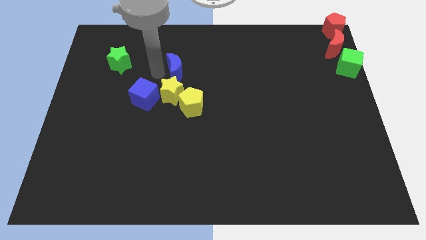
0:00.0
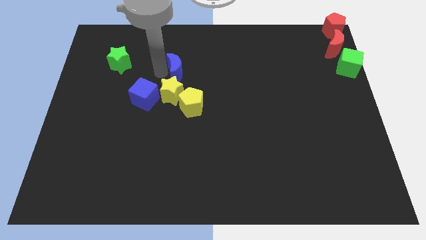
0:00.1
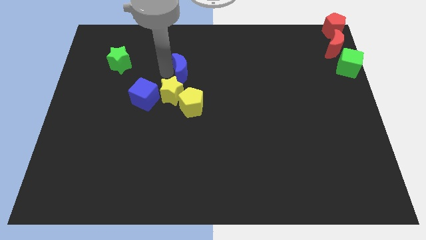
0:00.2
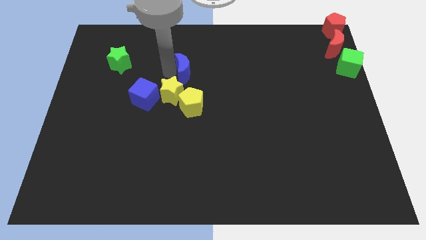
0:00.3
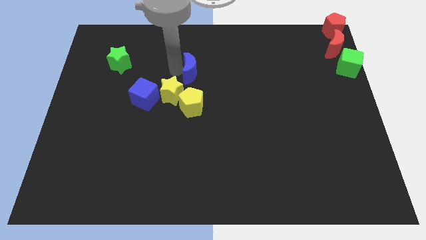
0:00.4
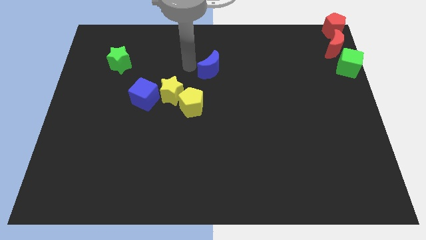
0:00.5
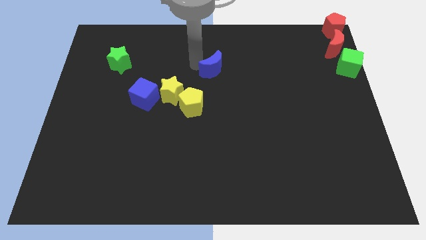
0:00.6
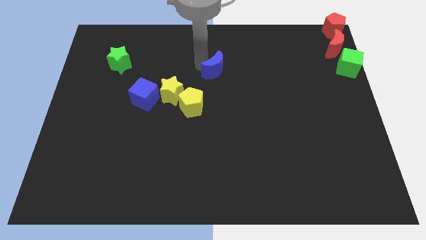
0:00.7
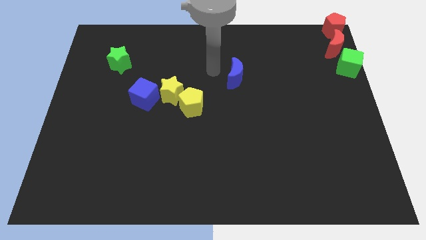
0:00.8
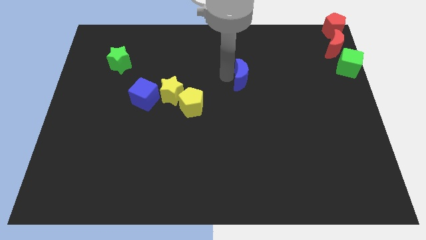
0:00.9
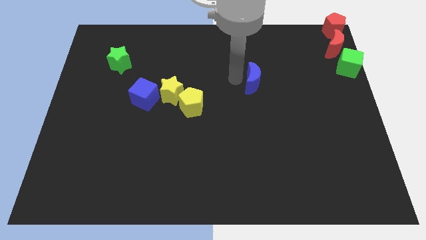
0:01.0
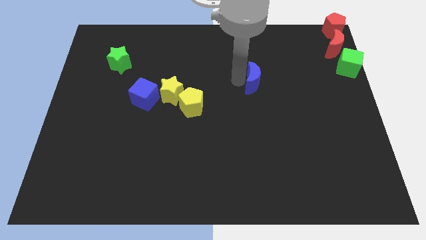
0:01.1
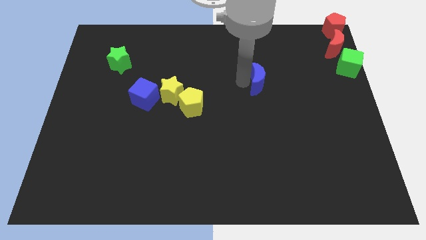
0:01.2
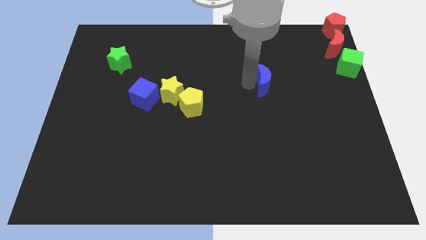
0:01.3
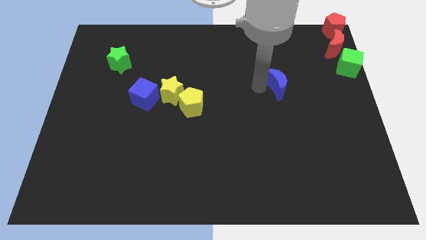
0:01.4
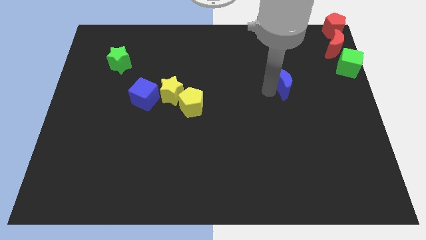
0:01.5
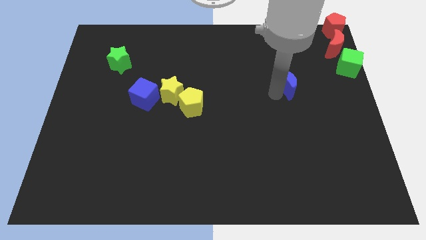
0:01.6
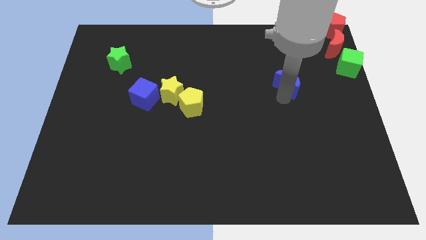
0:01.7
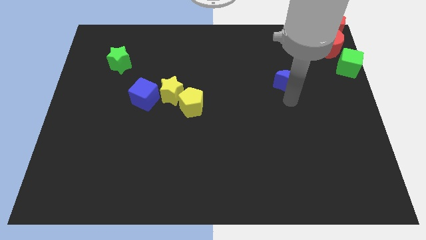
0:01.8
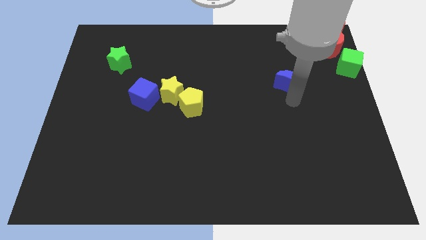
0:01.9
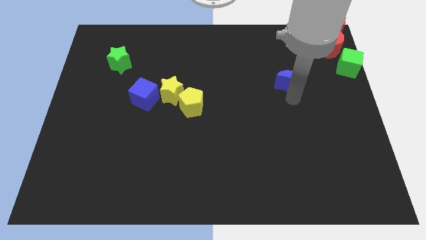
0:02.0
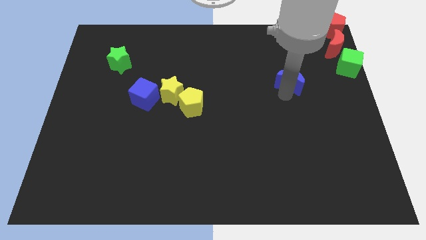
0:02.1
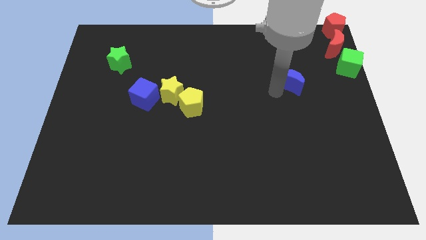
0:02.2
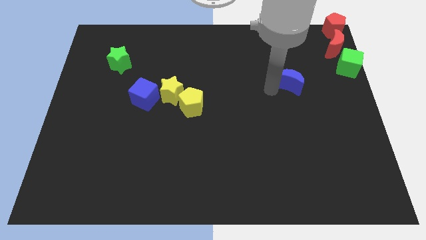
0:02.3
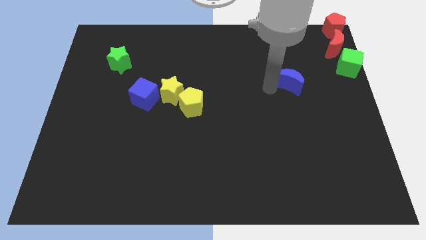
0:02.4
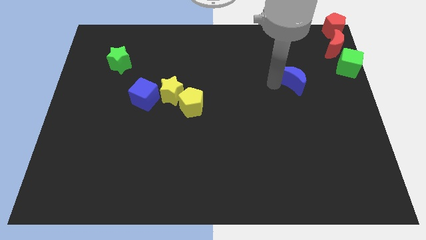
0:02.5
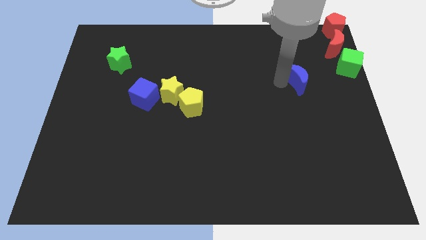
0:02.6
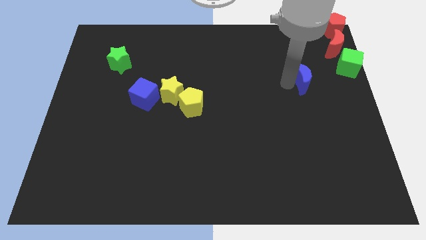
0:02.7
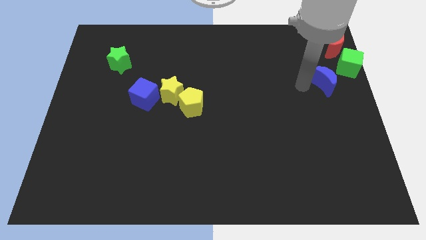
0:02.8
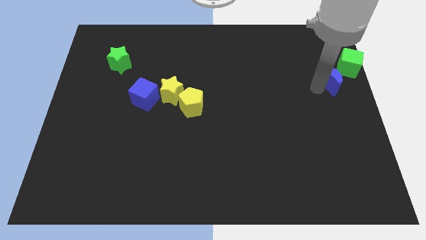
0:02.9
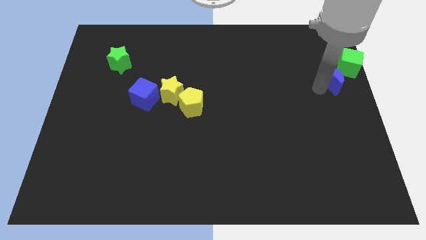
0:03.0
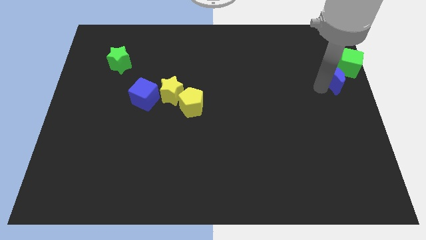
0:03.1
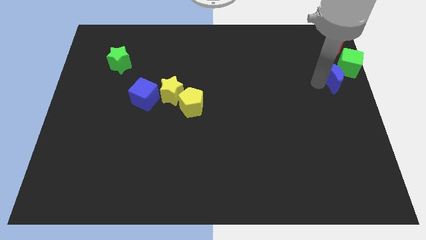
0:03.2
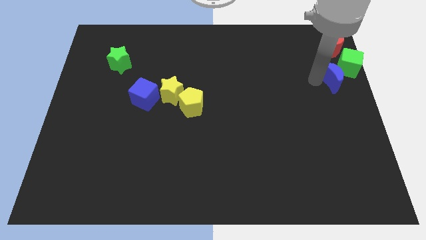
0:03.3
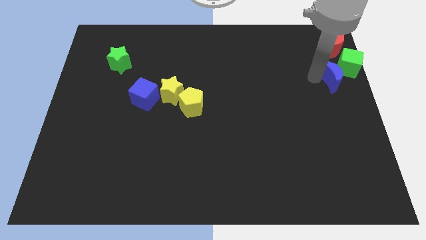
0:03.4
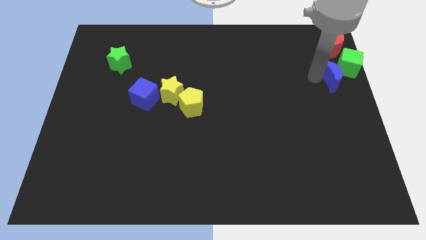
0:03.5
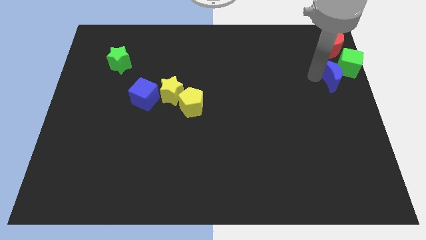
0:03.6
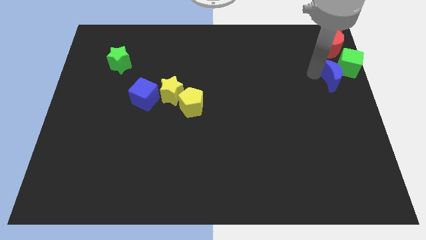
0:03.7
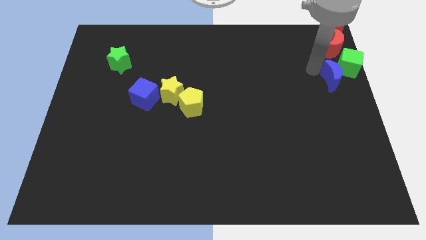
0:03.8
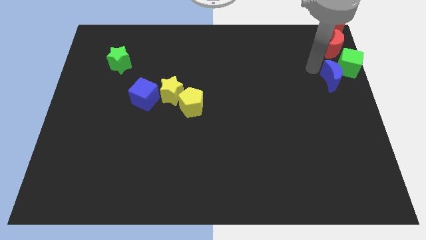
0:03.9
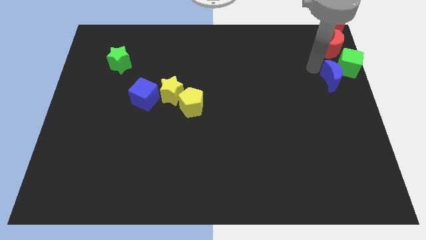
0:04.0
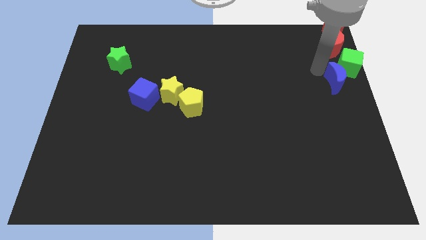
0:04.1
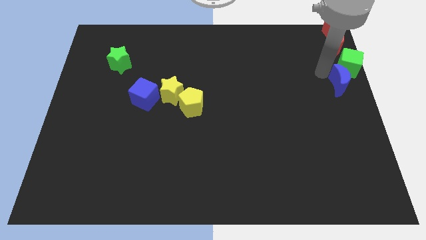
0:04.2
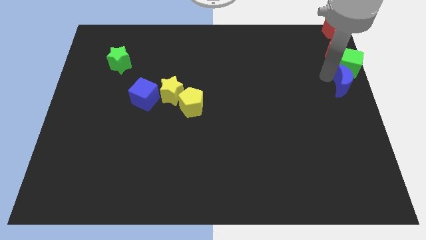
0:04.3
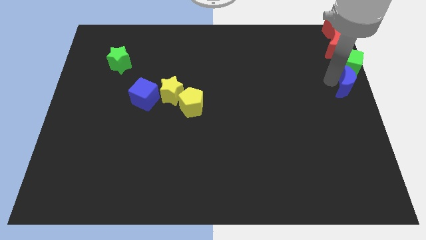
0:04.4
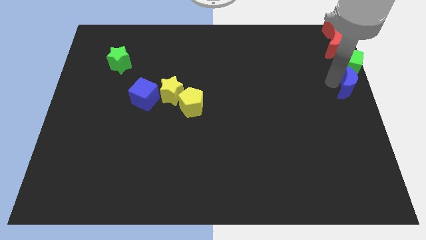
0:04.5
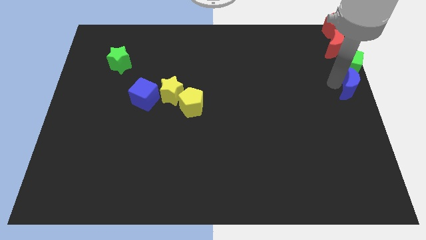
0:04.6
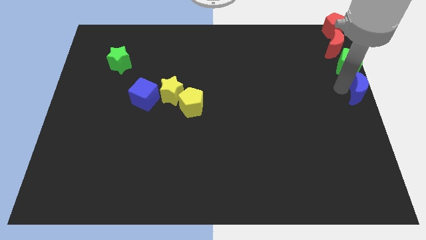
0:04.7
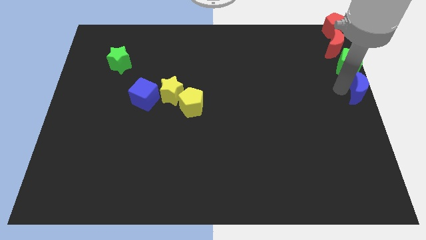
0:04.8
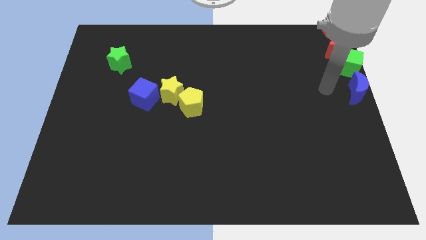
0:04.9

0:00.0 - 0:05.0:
move the blue crescent to the center right of the board

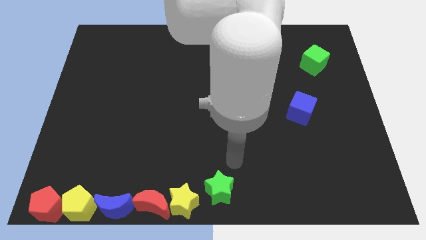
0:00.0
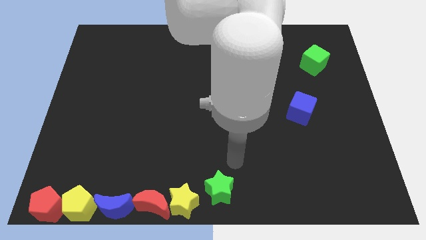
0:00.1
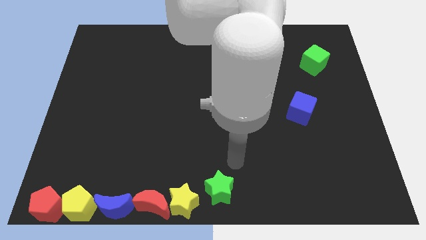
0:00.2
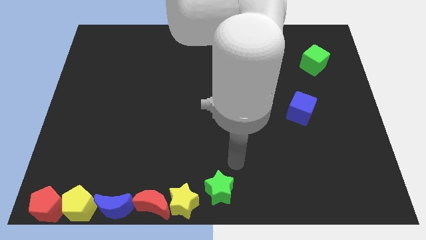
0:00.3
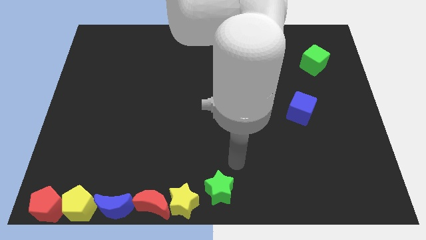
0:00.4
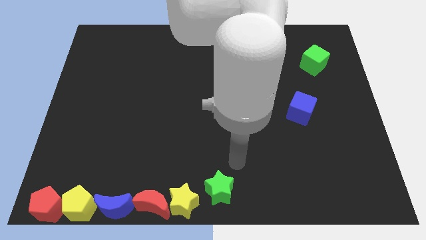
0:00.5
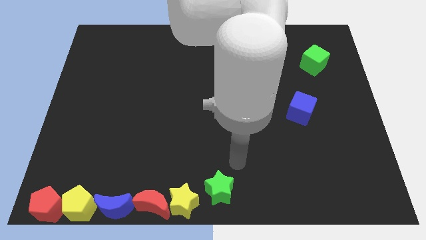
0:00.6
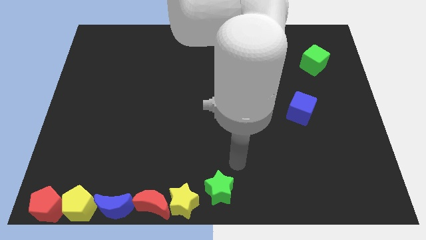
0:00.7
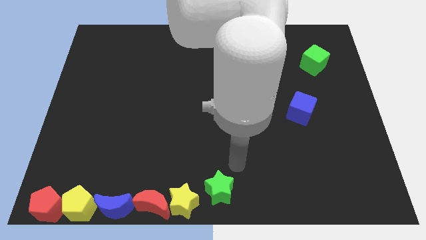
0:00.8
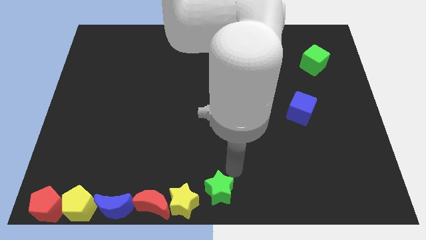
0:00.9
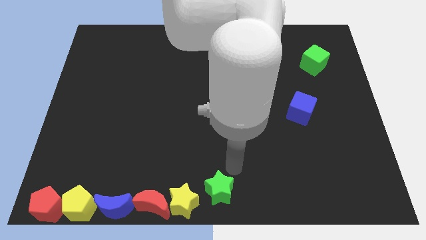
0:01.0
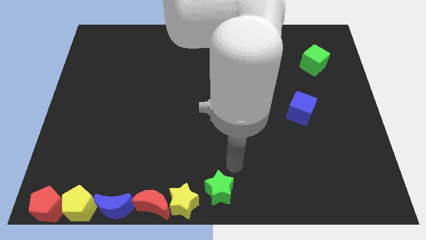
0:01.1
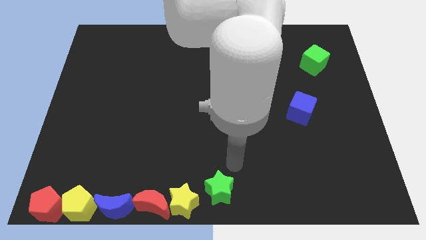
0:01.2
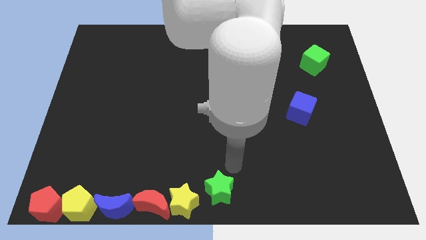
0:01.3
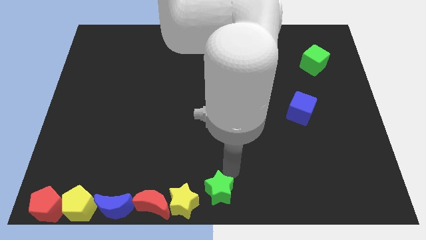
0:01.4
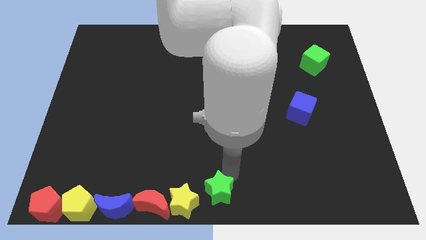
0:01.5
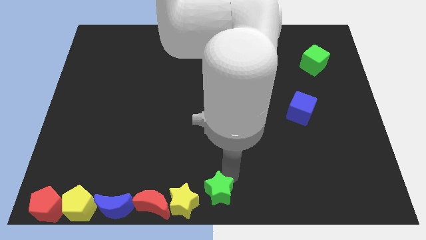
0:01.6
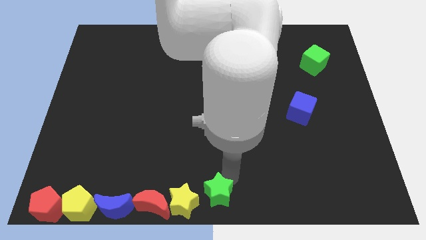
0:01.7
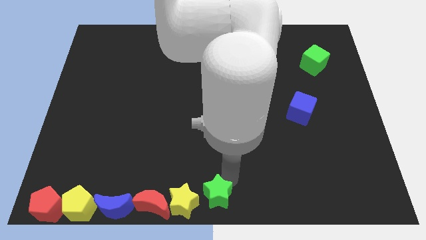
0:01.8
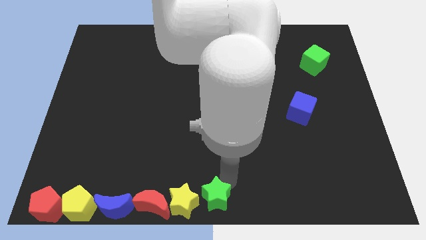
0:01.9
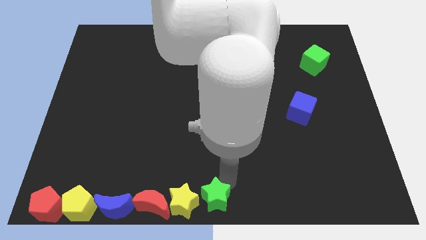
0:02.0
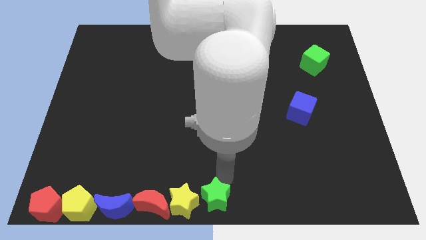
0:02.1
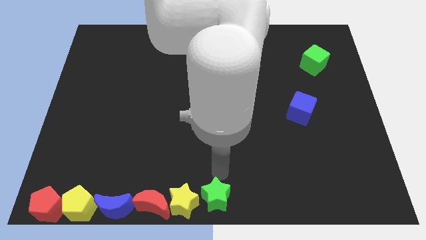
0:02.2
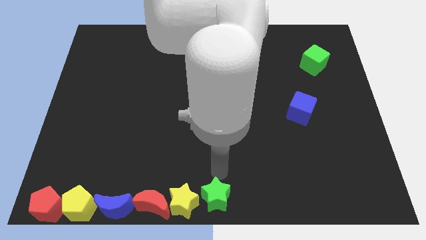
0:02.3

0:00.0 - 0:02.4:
move the green star right beside the yellow star

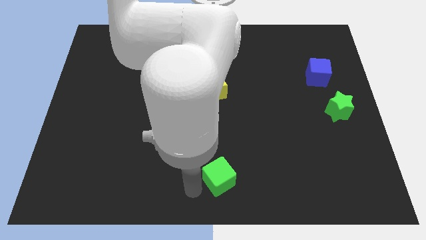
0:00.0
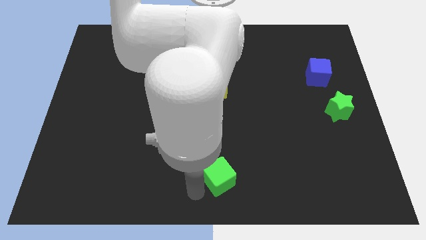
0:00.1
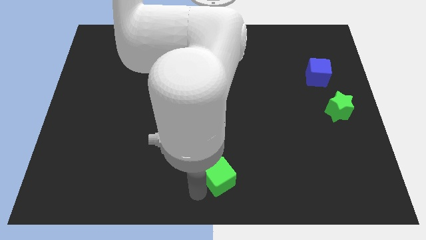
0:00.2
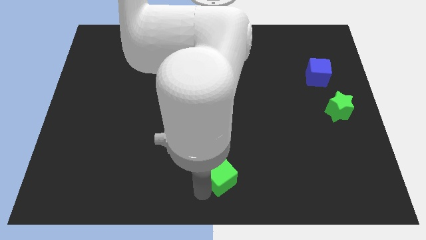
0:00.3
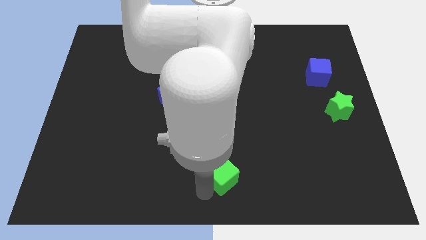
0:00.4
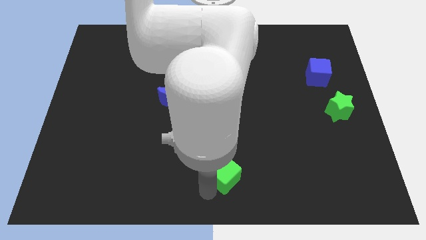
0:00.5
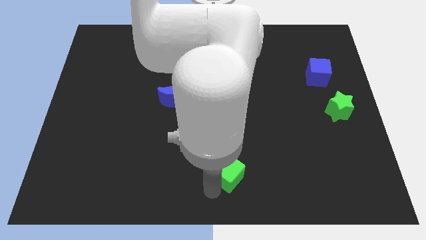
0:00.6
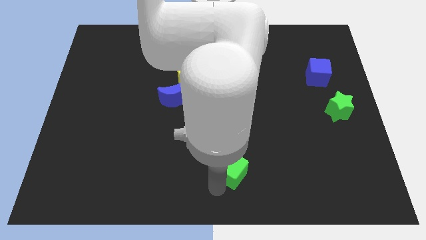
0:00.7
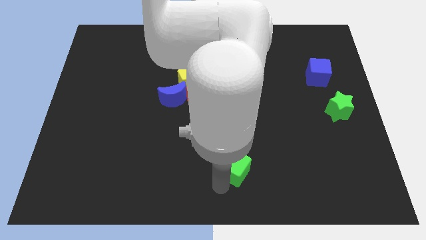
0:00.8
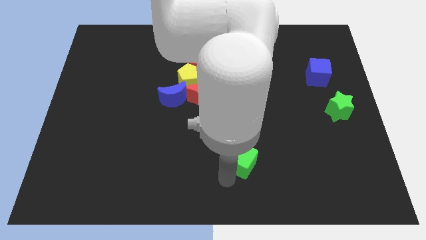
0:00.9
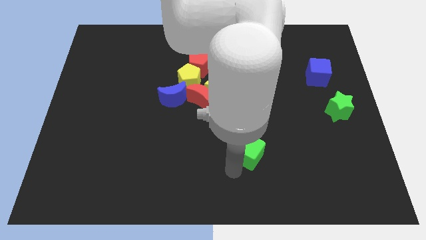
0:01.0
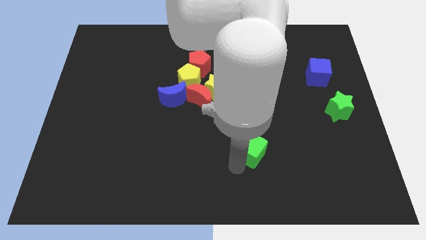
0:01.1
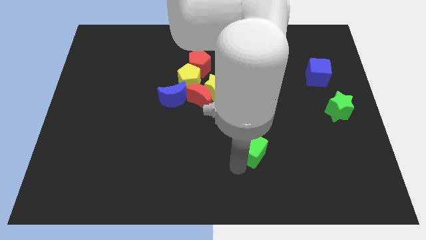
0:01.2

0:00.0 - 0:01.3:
slightly move the green cube towards up

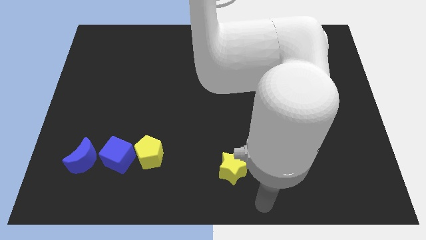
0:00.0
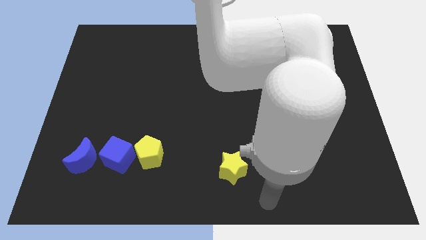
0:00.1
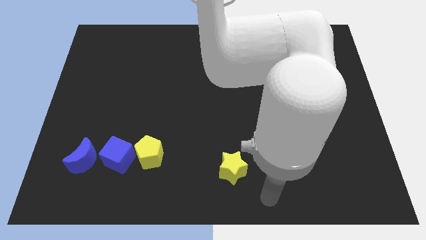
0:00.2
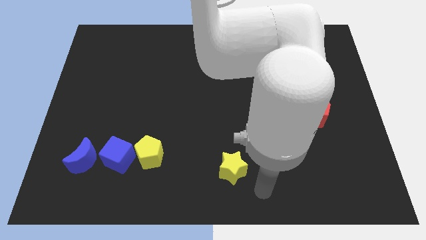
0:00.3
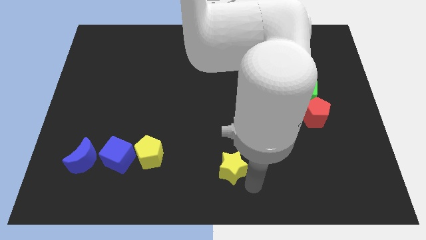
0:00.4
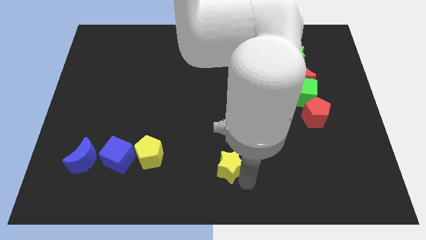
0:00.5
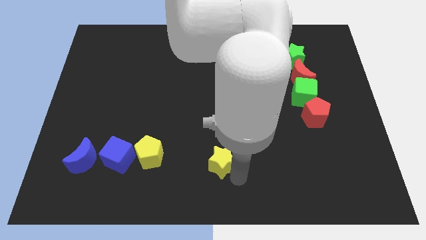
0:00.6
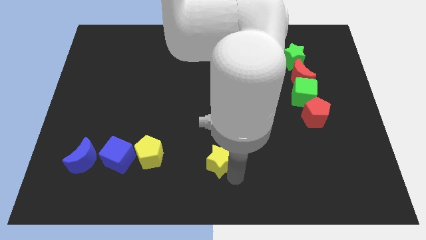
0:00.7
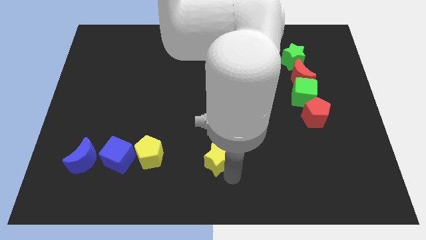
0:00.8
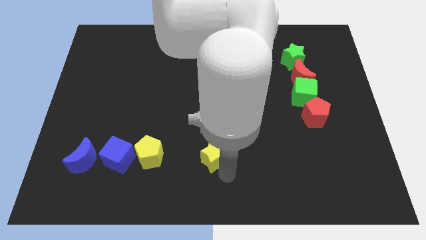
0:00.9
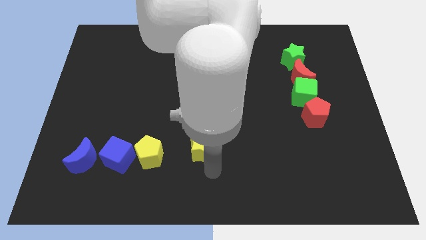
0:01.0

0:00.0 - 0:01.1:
push the yellow star parallel to the yellow pentagon
